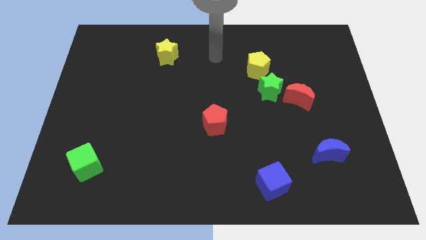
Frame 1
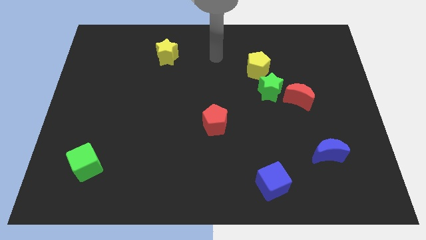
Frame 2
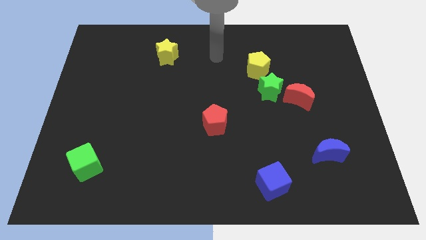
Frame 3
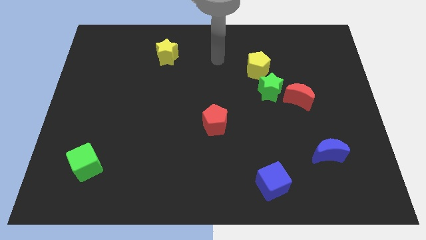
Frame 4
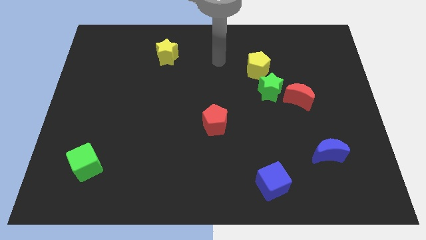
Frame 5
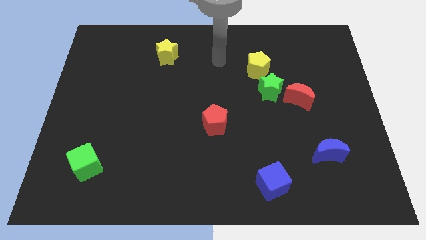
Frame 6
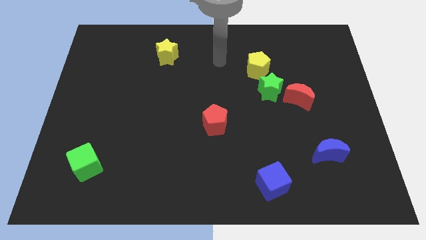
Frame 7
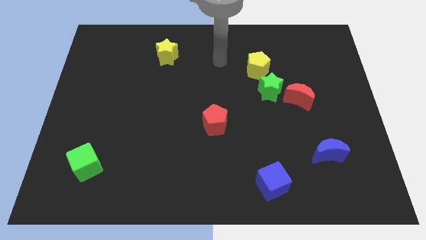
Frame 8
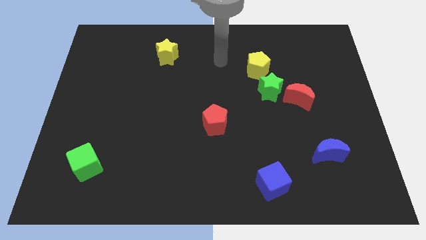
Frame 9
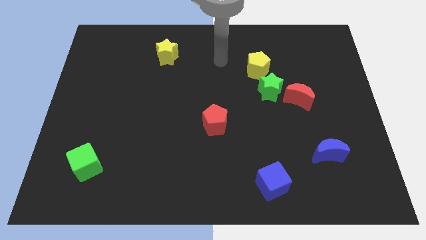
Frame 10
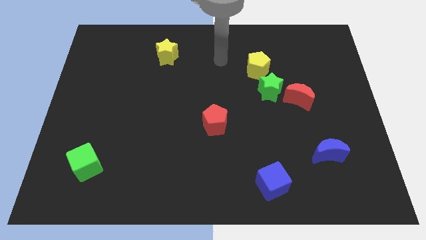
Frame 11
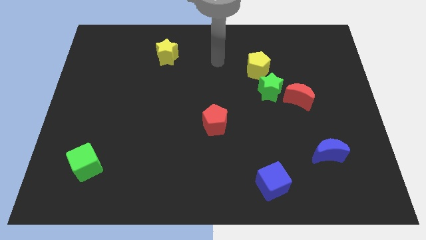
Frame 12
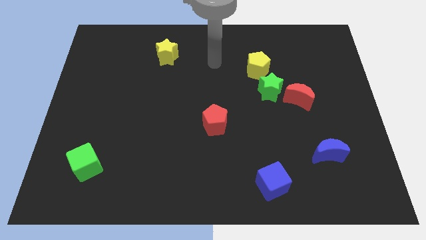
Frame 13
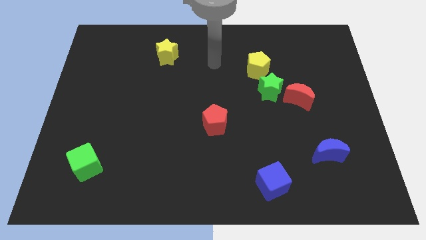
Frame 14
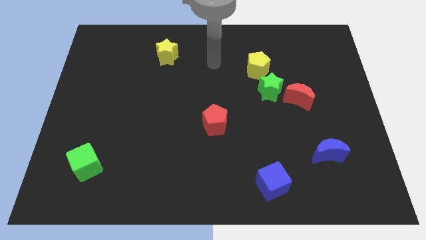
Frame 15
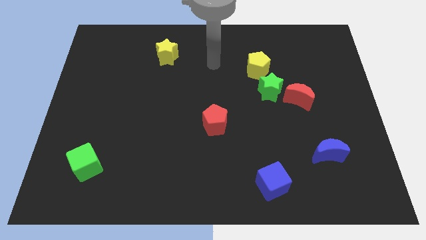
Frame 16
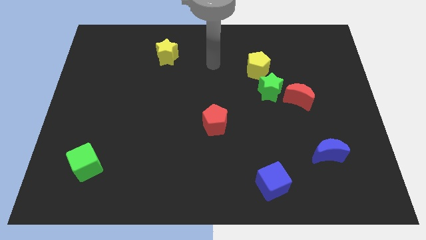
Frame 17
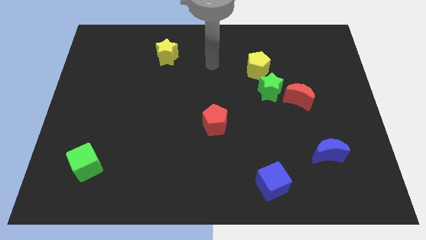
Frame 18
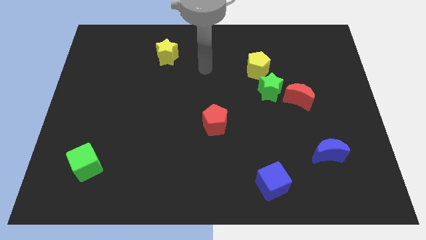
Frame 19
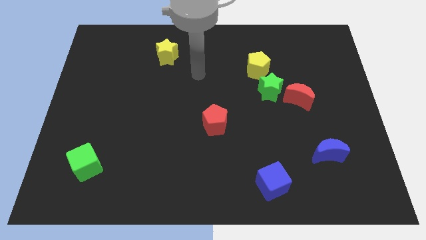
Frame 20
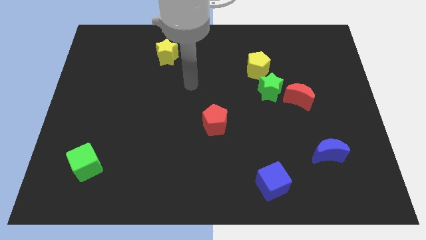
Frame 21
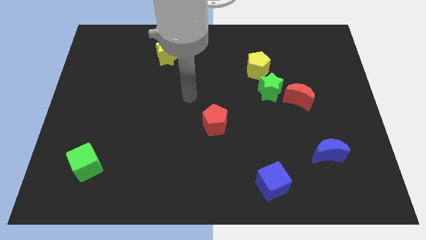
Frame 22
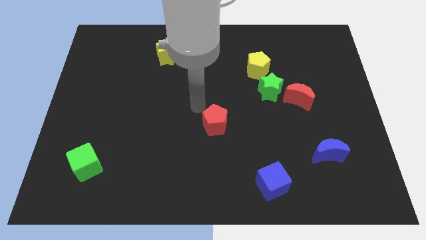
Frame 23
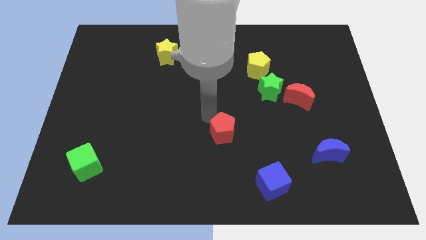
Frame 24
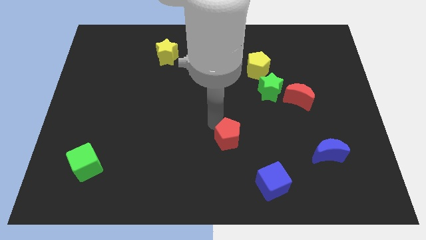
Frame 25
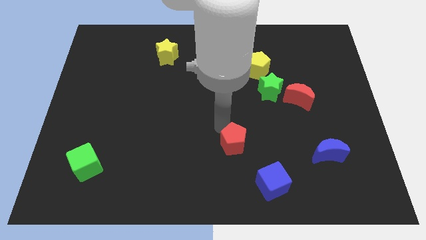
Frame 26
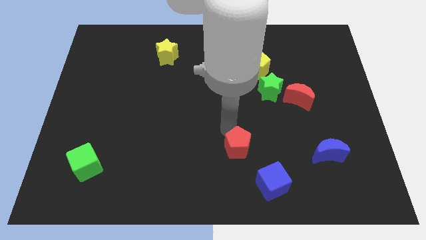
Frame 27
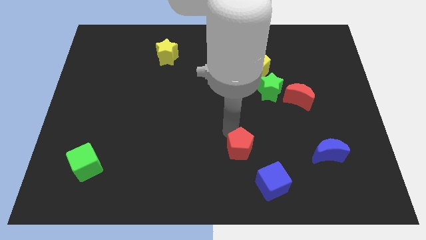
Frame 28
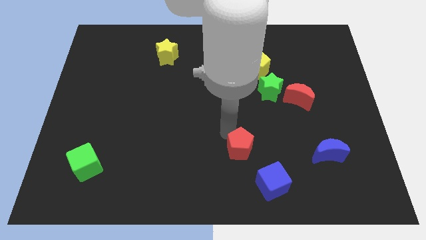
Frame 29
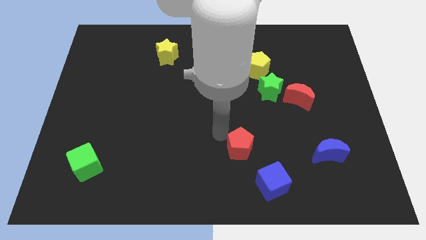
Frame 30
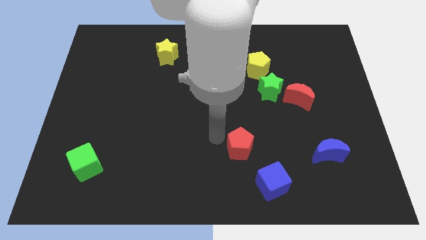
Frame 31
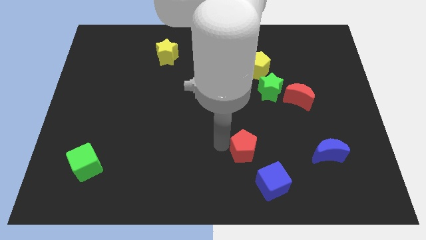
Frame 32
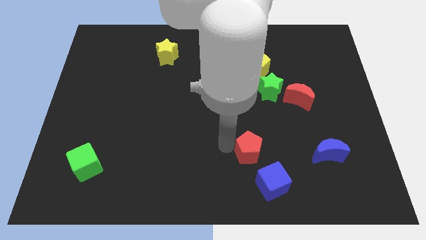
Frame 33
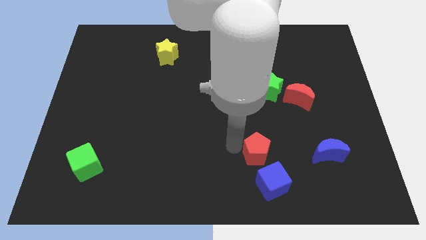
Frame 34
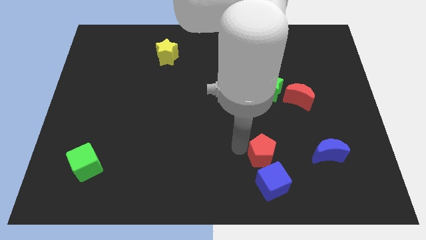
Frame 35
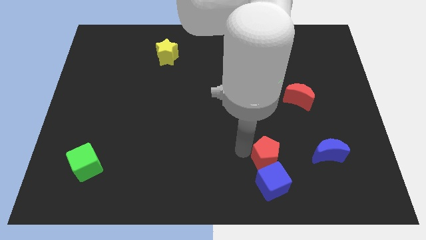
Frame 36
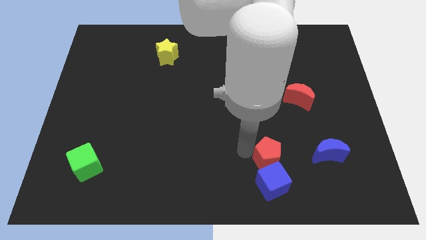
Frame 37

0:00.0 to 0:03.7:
move the red pentagon to the top of the blue cube

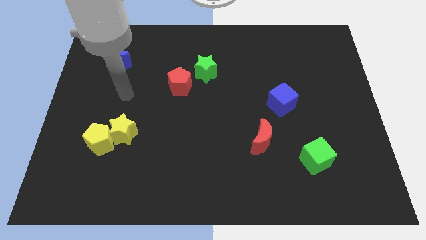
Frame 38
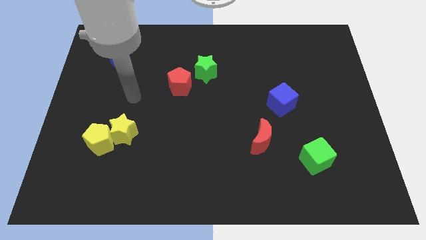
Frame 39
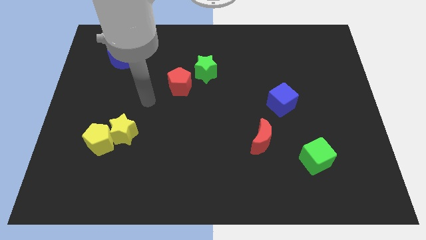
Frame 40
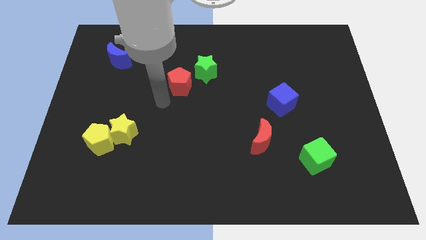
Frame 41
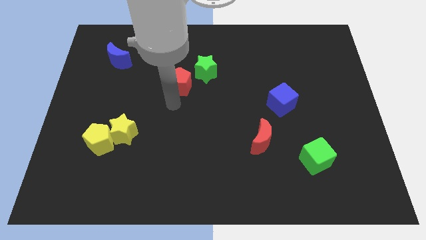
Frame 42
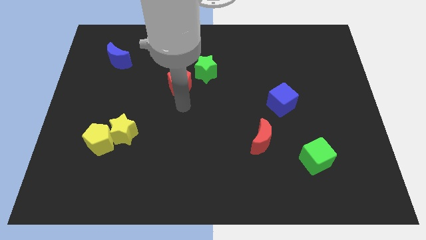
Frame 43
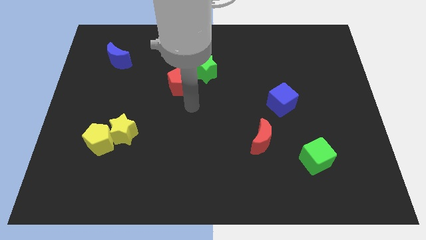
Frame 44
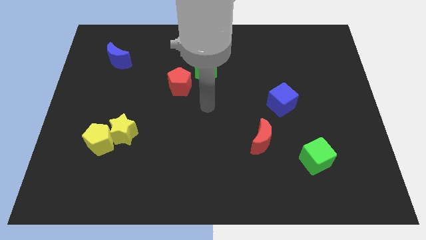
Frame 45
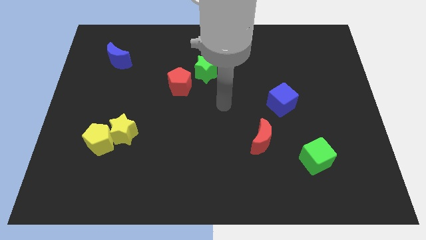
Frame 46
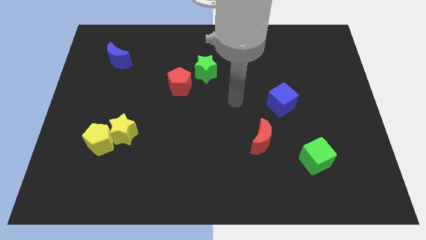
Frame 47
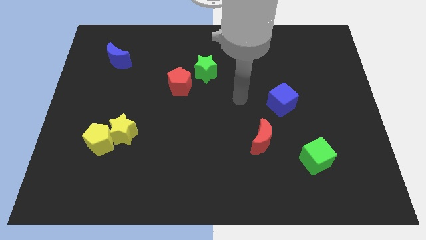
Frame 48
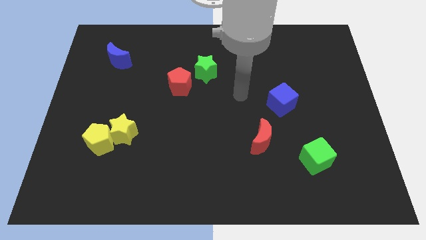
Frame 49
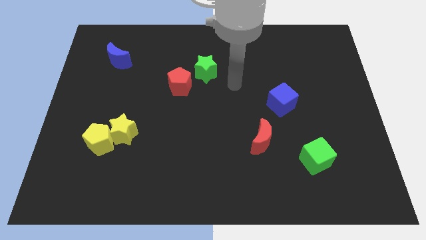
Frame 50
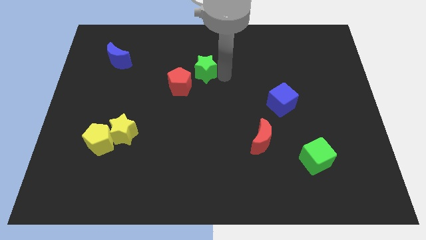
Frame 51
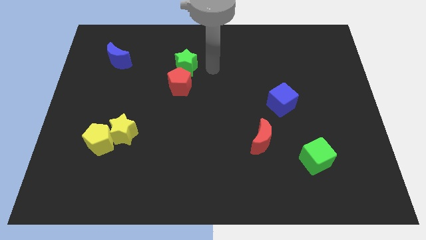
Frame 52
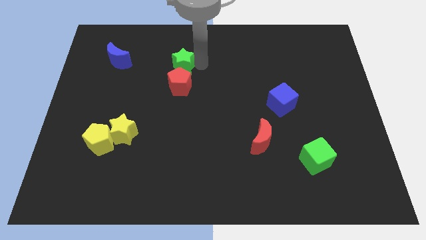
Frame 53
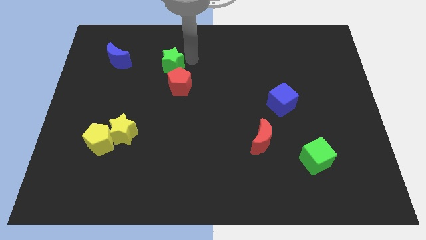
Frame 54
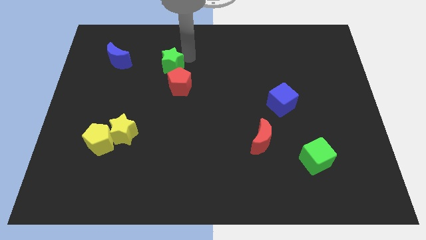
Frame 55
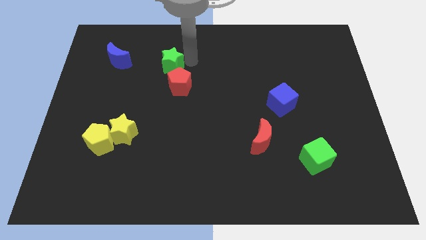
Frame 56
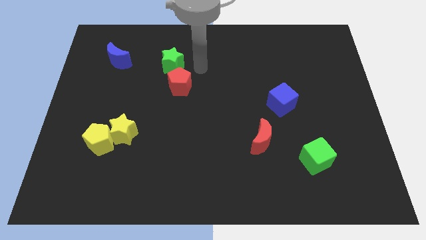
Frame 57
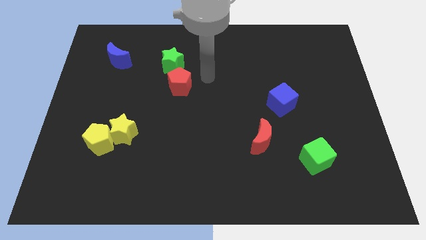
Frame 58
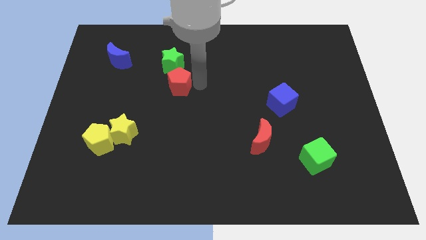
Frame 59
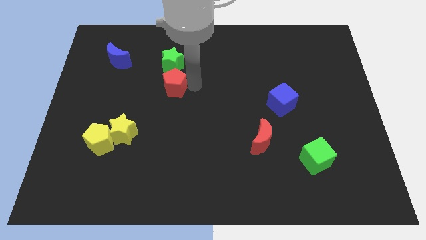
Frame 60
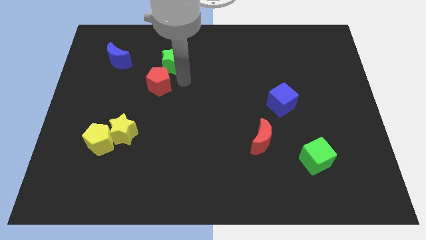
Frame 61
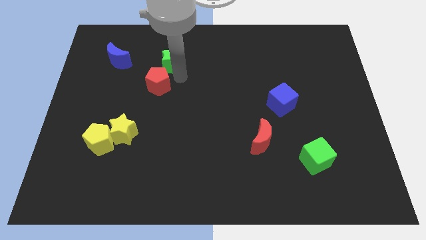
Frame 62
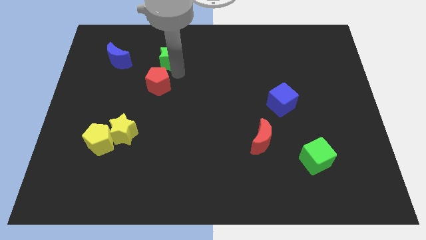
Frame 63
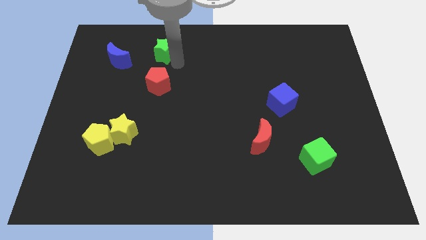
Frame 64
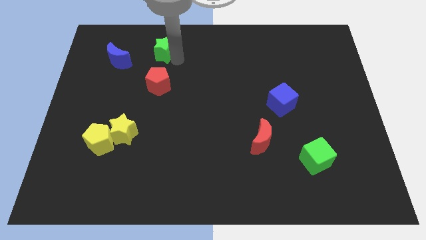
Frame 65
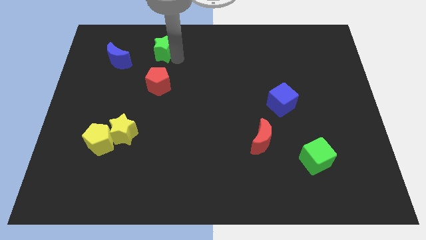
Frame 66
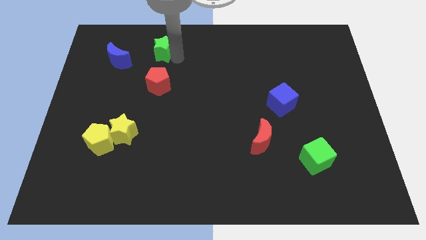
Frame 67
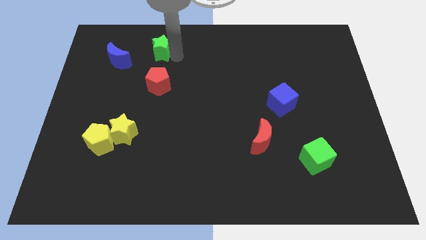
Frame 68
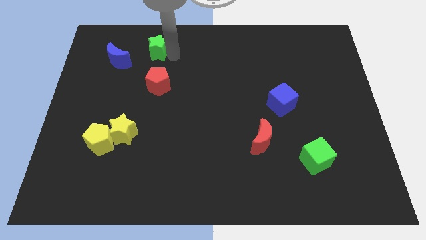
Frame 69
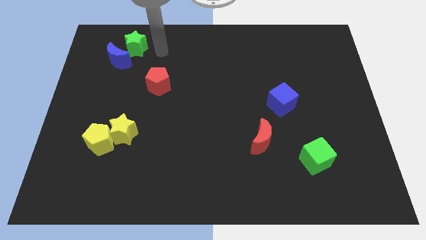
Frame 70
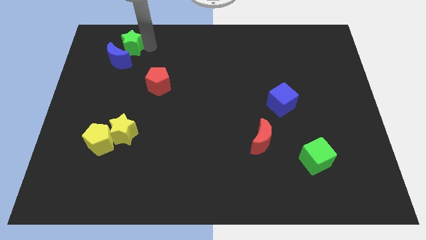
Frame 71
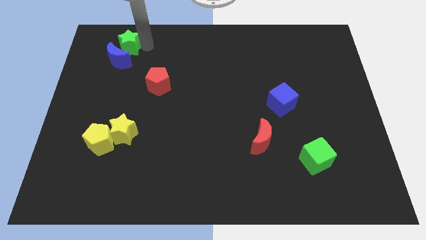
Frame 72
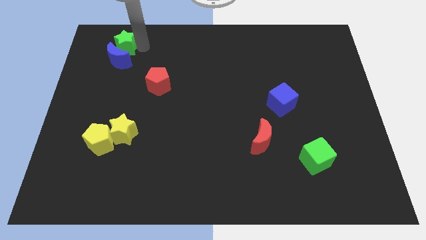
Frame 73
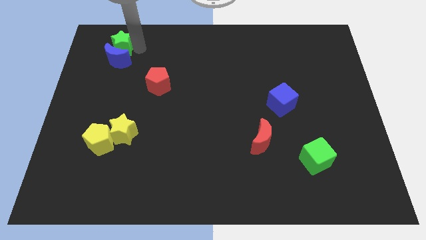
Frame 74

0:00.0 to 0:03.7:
move green star to the top of blue crescent

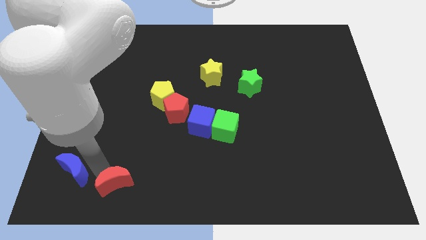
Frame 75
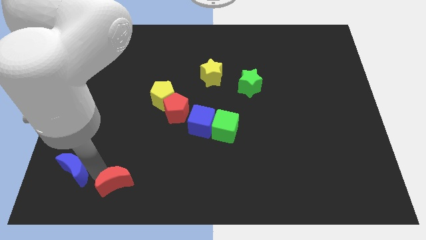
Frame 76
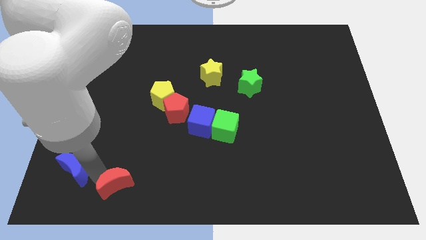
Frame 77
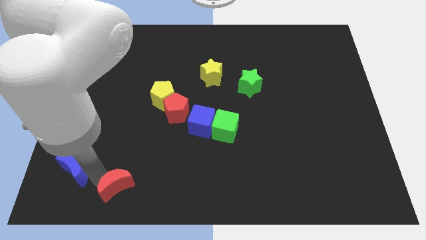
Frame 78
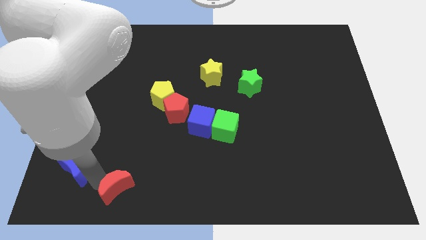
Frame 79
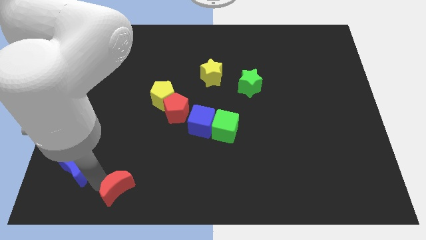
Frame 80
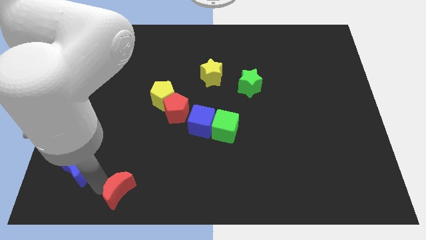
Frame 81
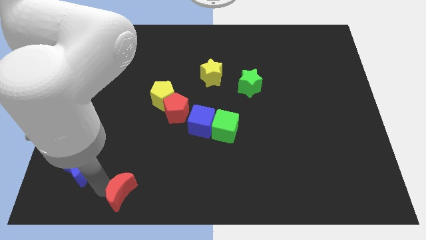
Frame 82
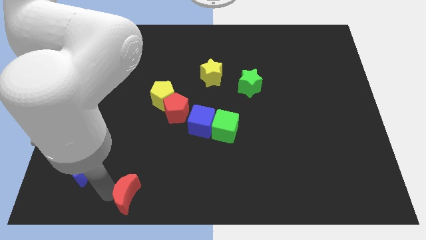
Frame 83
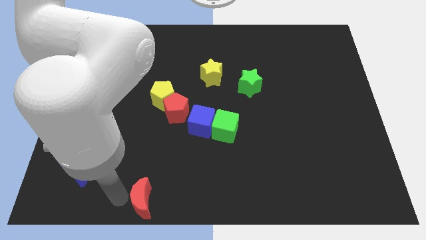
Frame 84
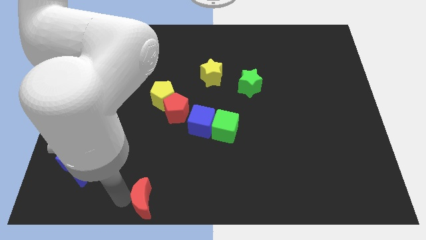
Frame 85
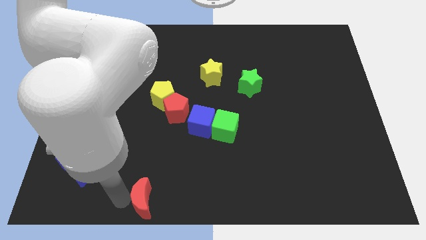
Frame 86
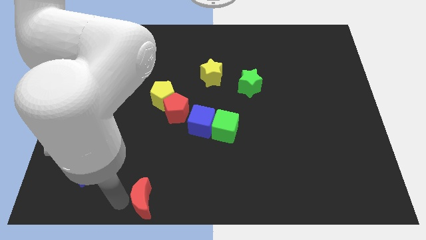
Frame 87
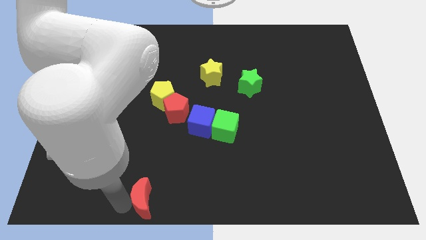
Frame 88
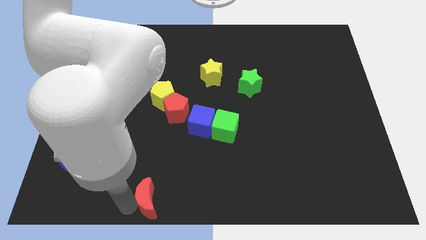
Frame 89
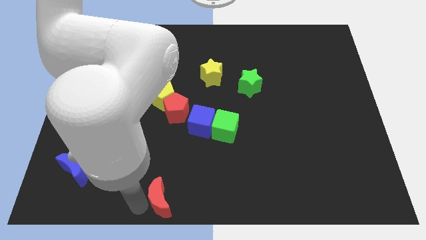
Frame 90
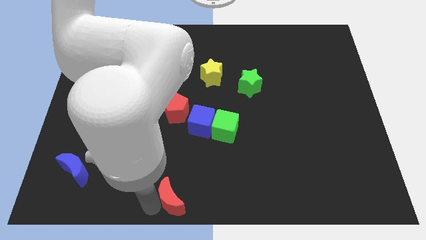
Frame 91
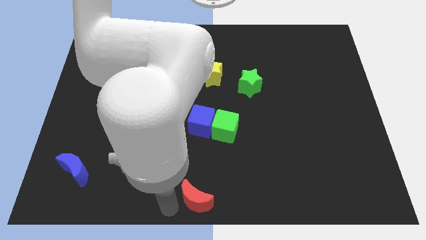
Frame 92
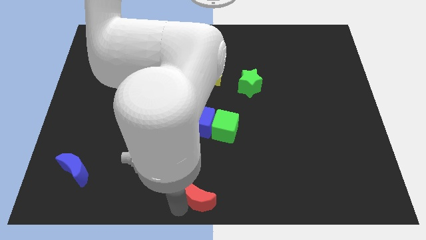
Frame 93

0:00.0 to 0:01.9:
push red crescent towards the bottom center of the board
